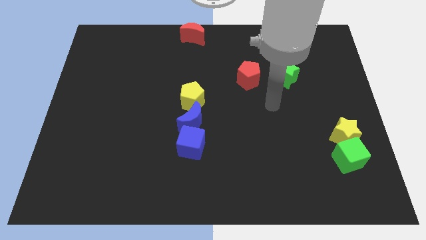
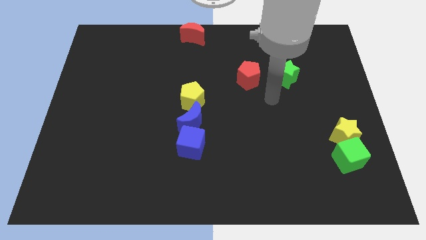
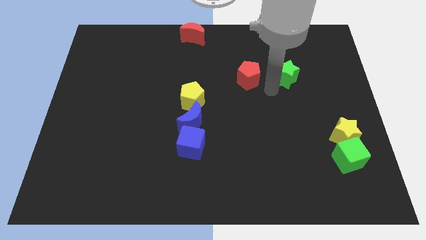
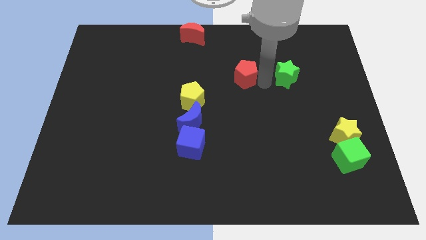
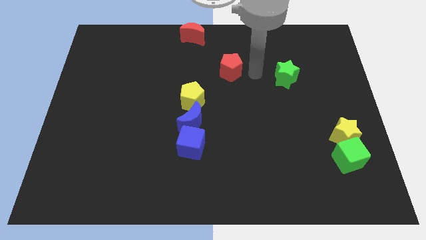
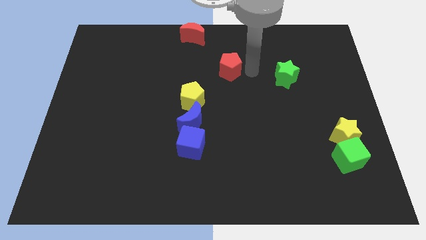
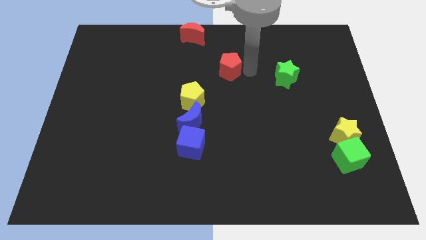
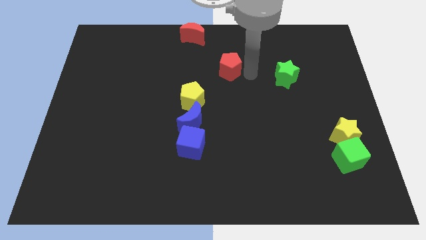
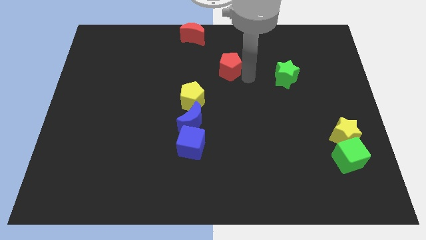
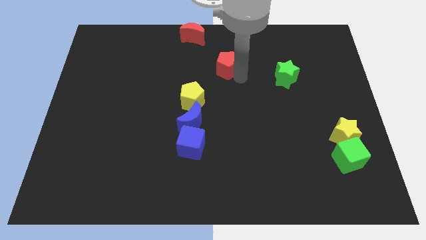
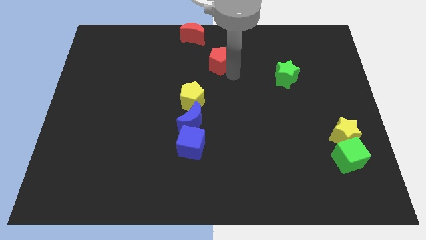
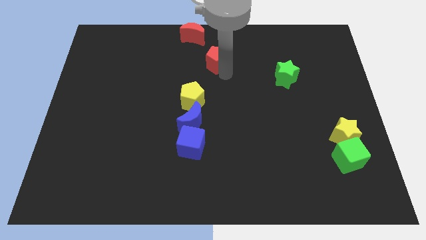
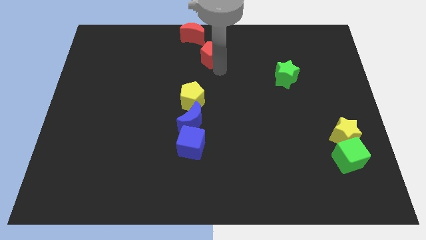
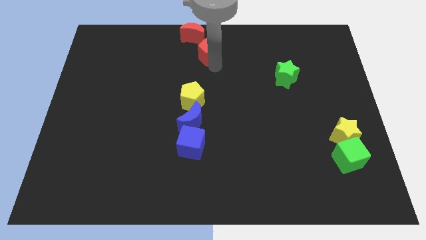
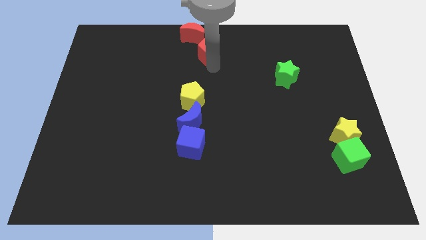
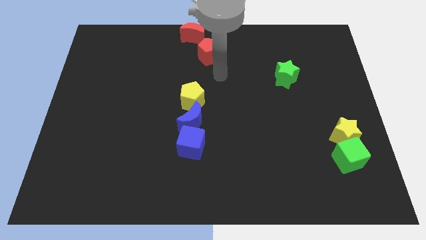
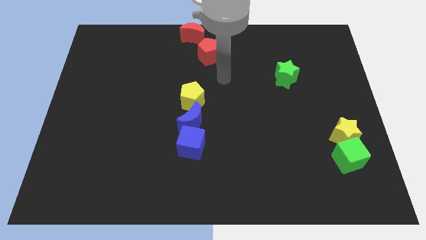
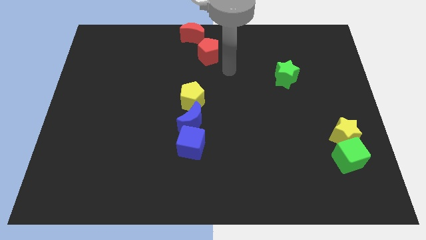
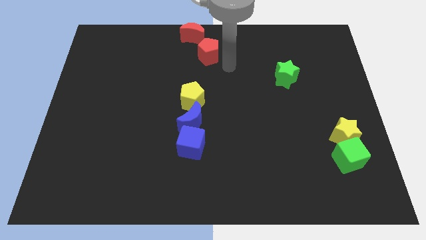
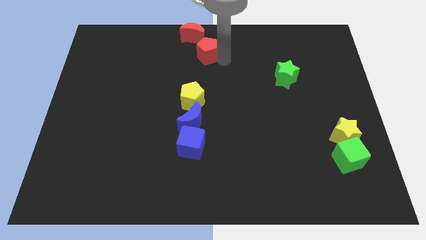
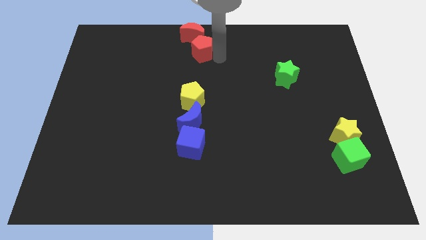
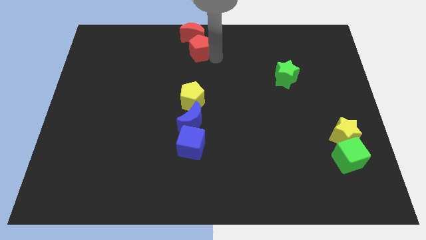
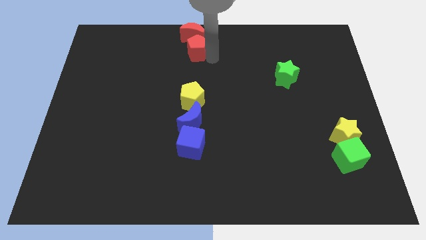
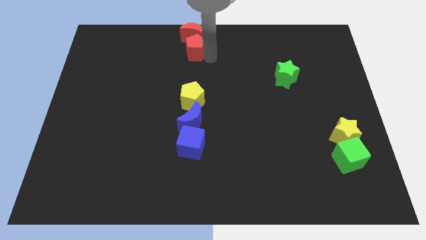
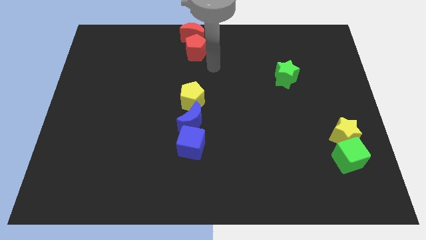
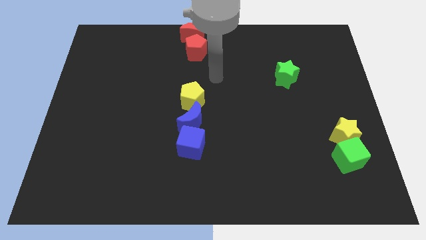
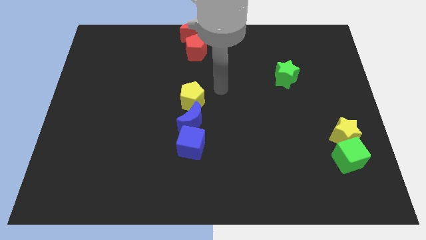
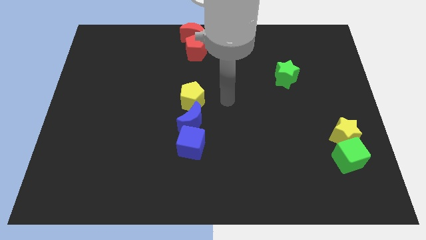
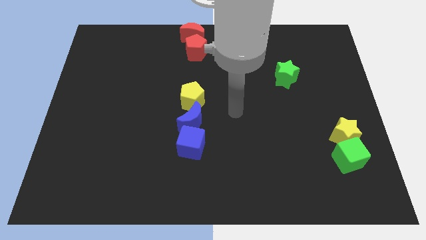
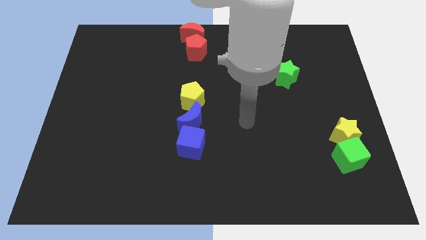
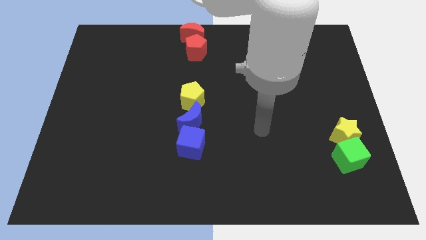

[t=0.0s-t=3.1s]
drag red pentagon into red moon

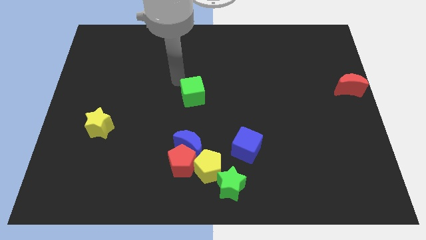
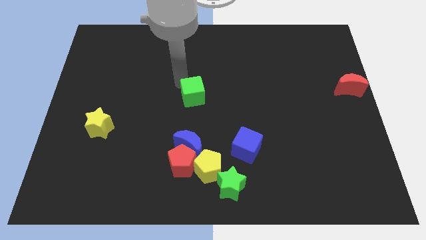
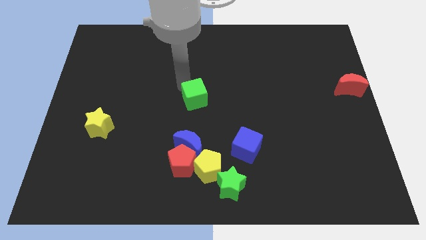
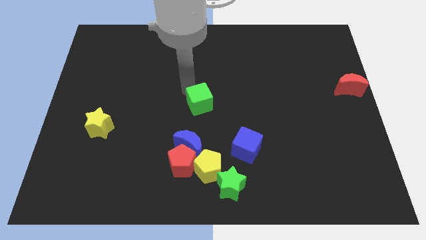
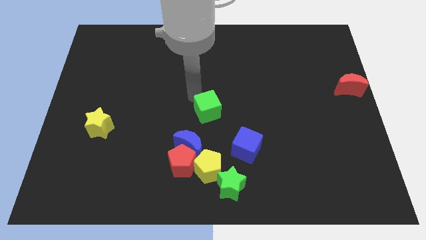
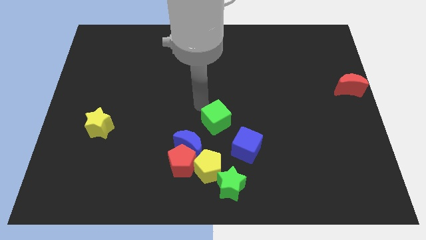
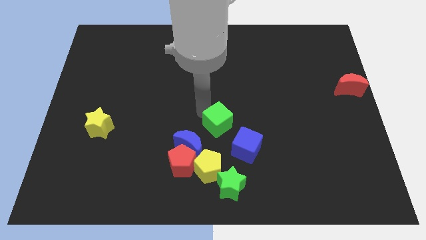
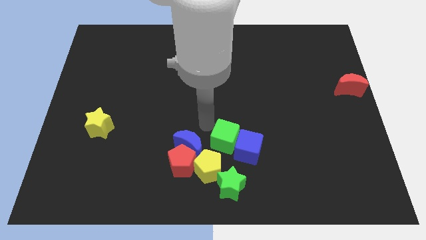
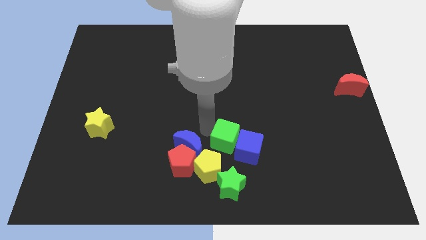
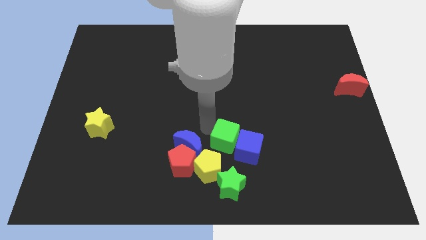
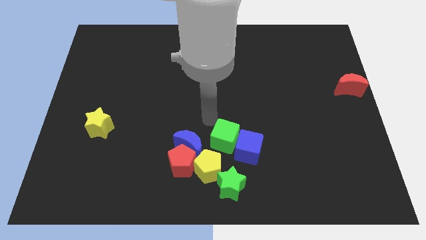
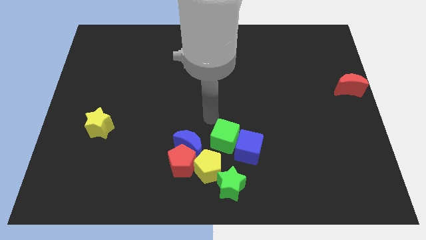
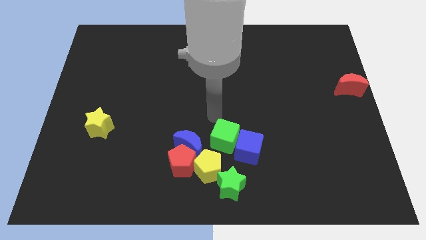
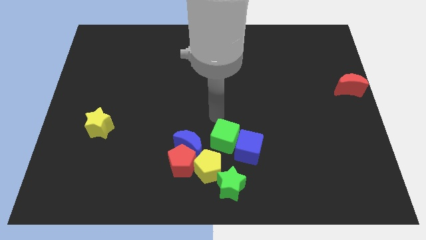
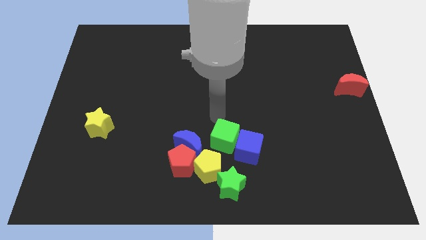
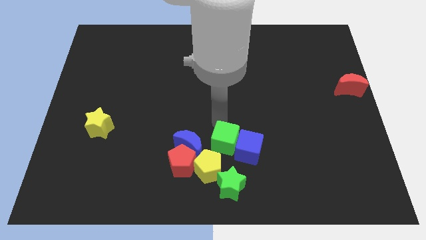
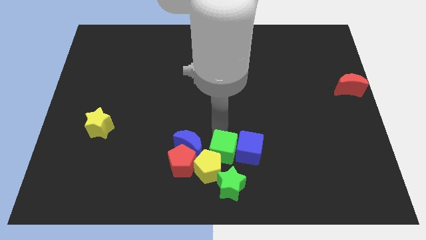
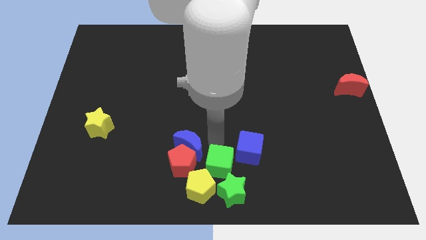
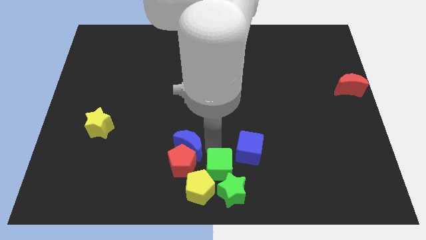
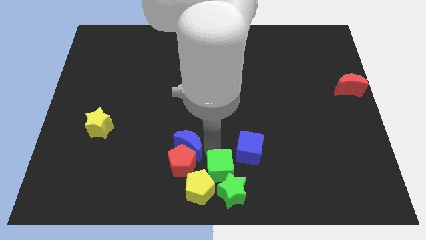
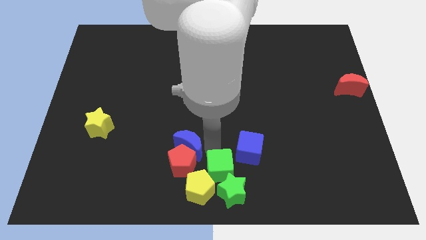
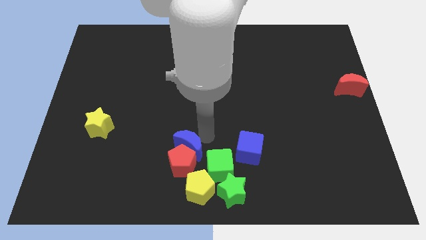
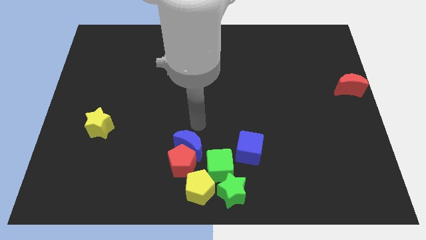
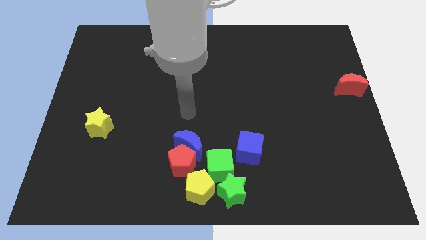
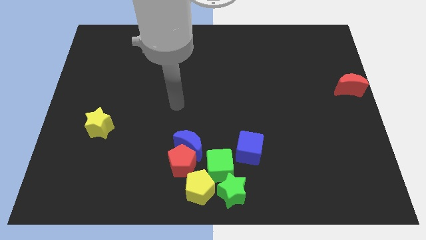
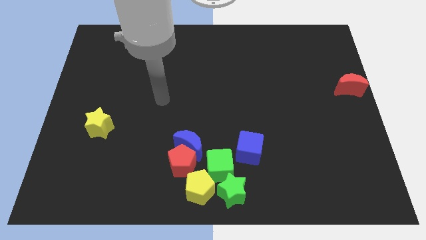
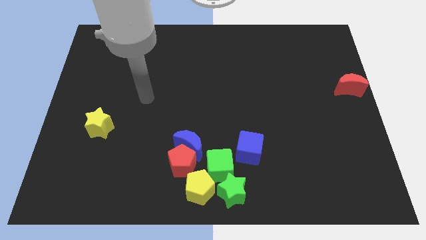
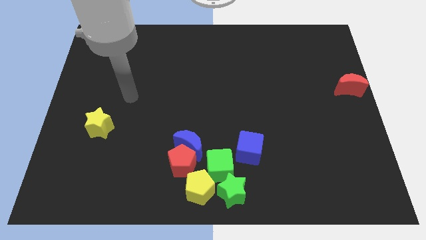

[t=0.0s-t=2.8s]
move the green cube to the right of the red pentagon

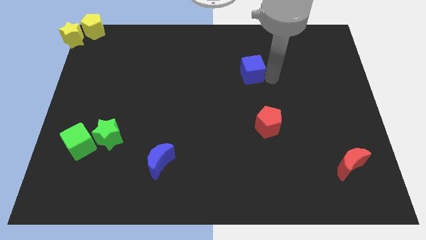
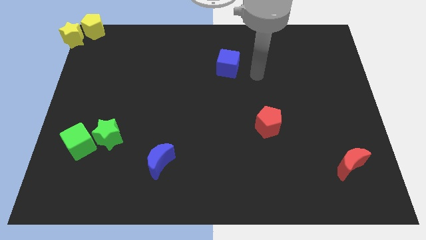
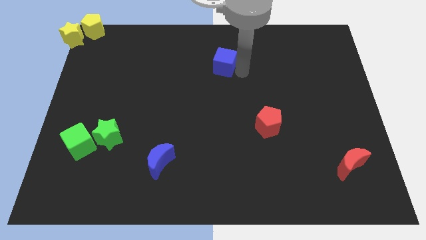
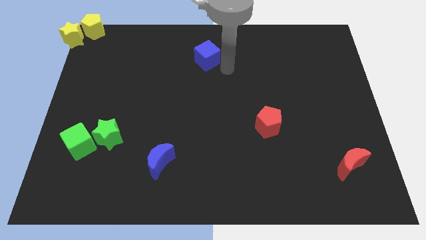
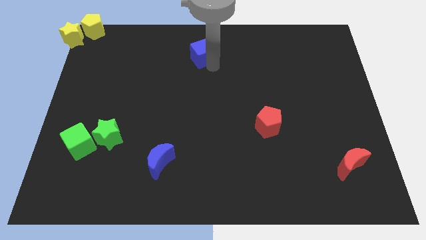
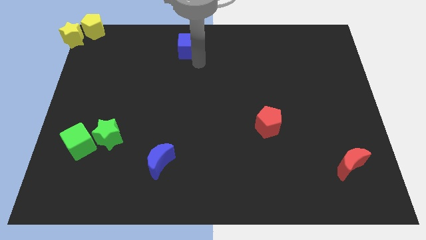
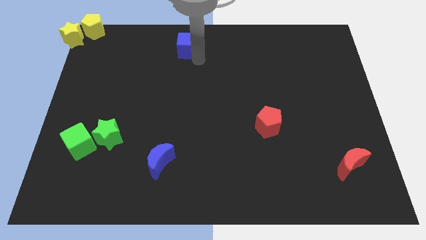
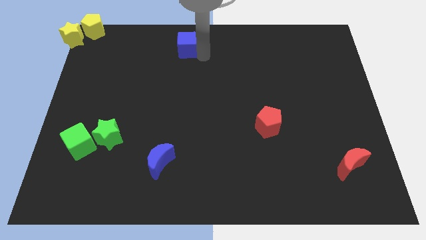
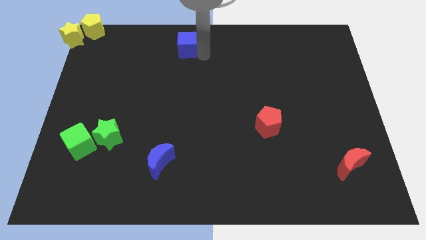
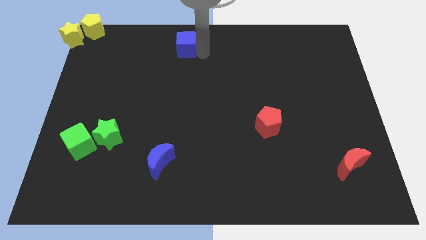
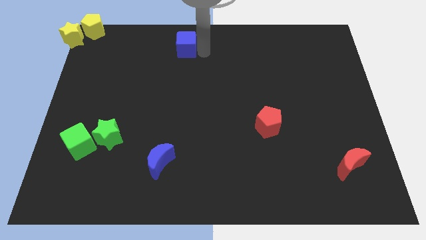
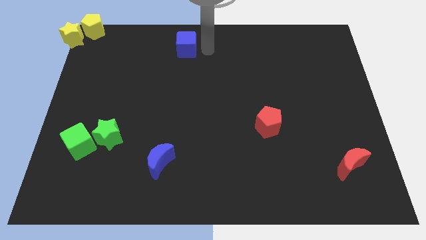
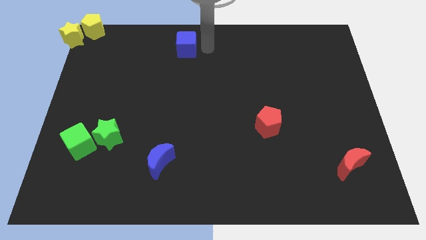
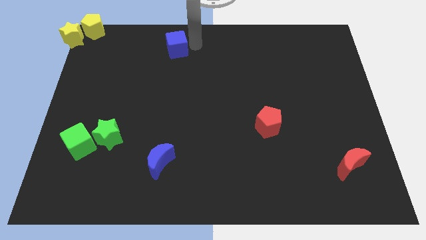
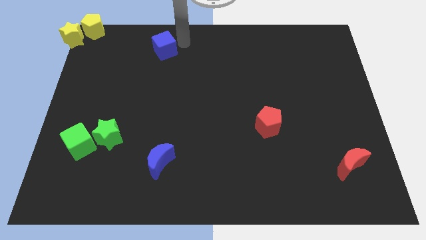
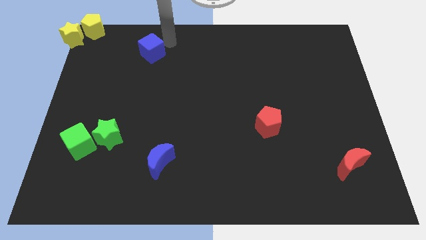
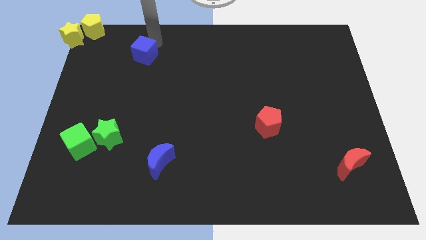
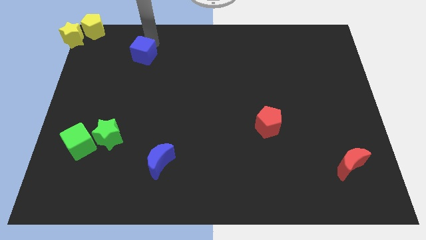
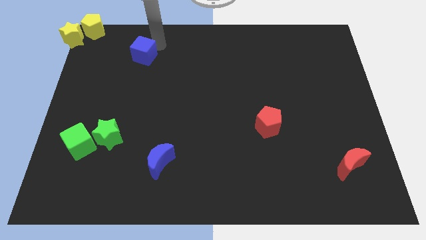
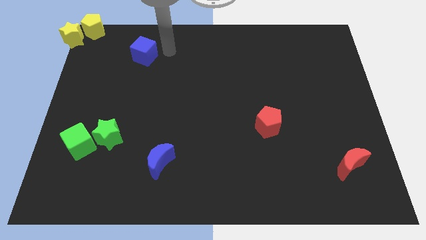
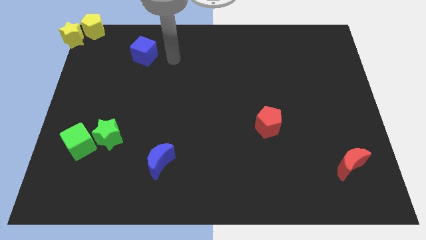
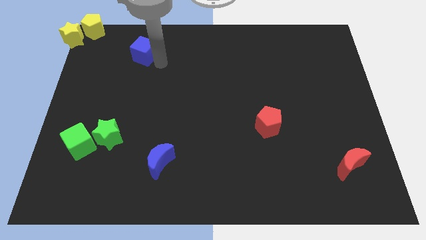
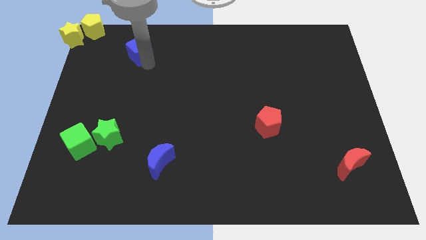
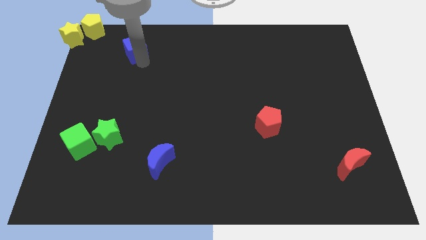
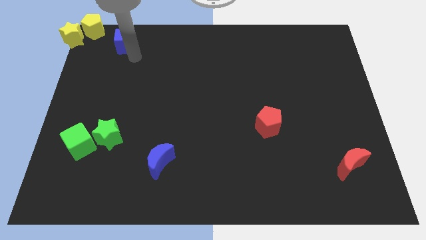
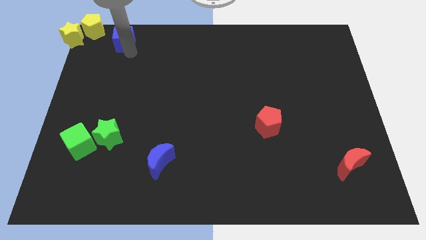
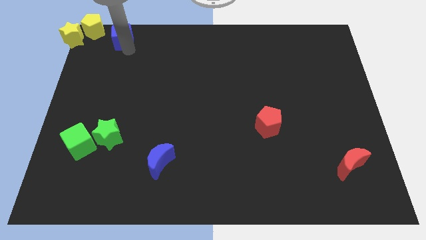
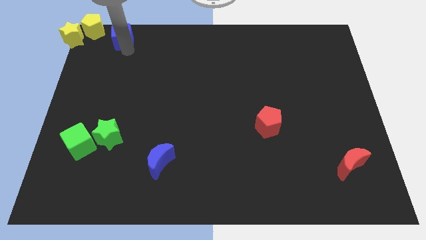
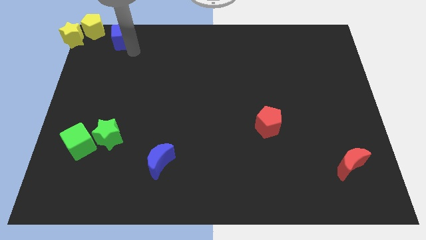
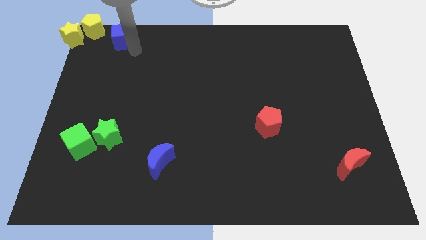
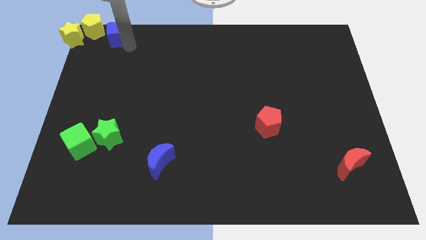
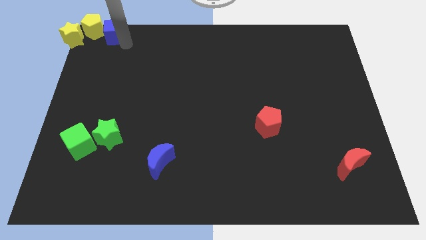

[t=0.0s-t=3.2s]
move the blue cube close to the yellow pentagon and yellow star
